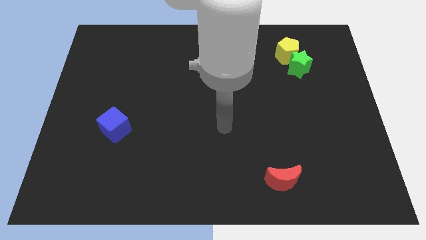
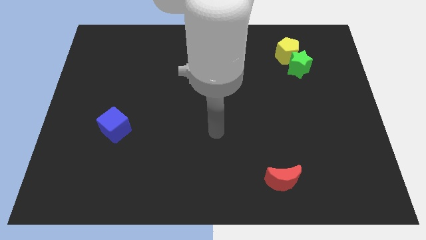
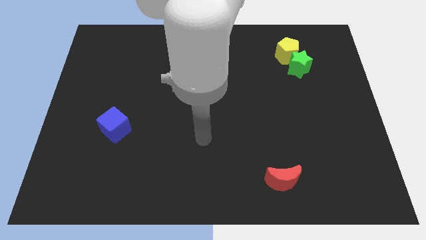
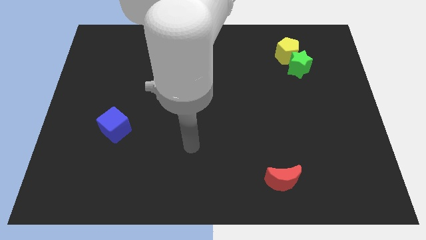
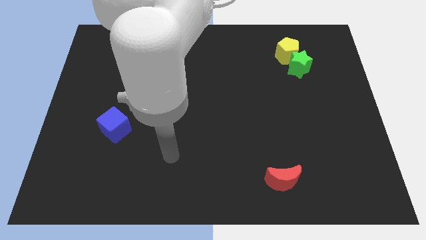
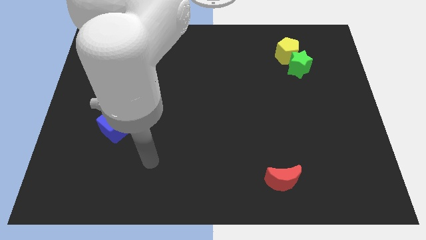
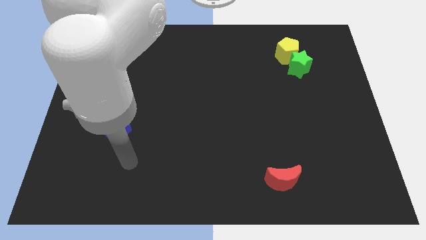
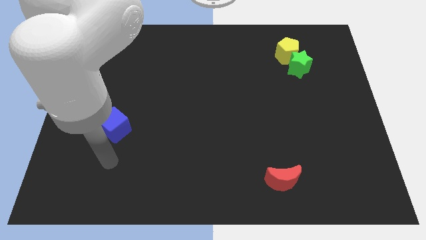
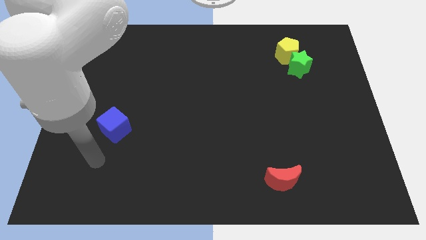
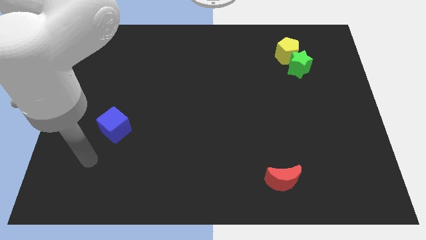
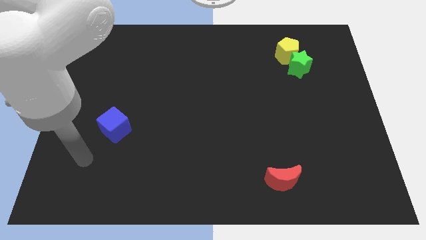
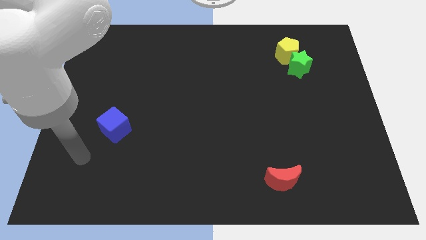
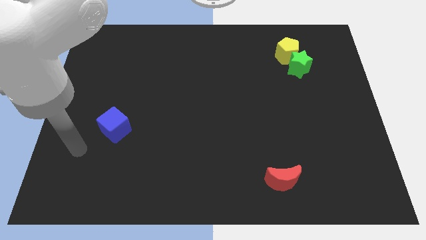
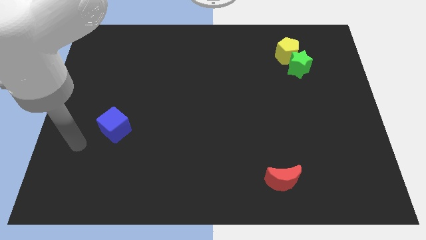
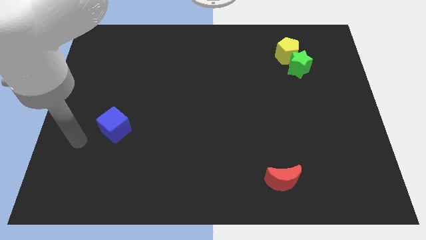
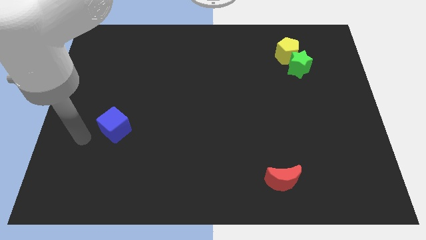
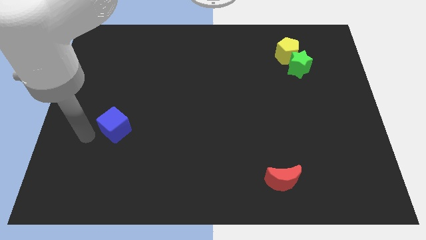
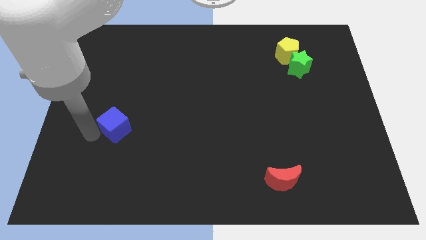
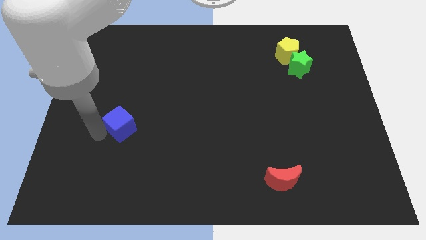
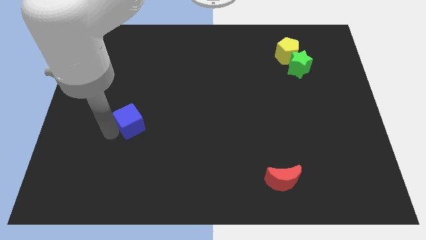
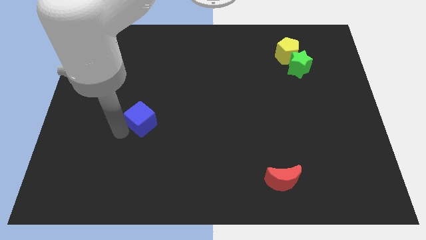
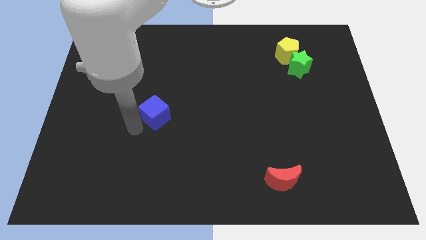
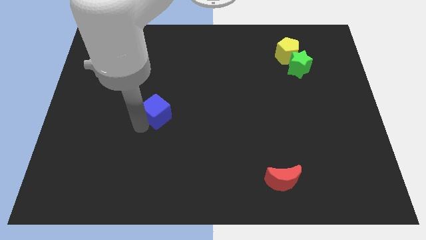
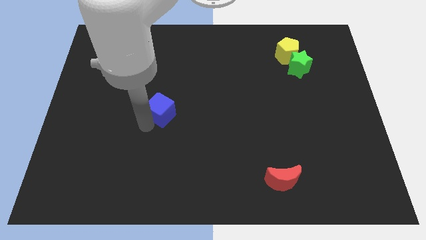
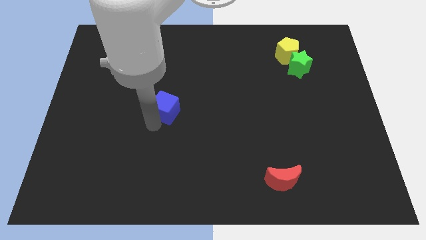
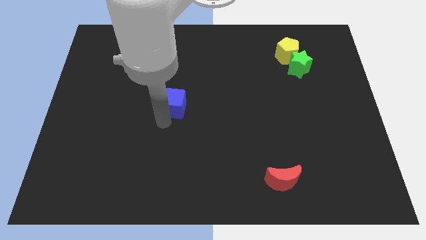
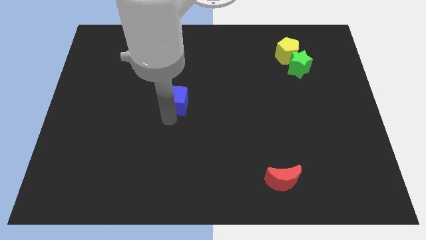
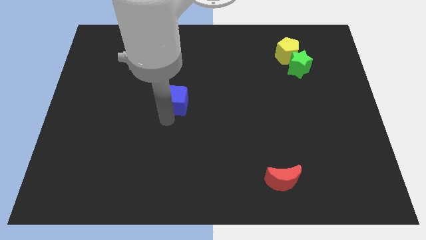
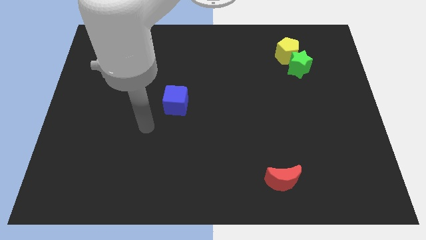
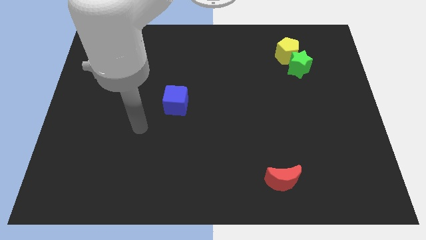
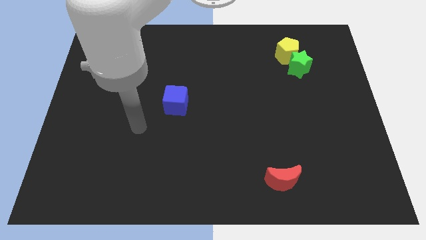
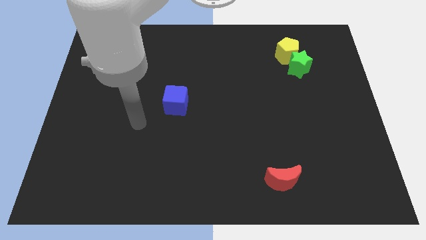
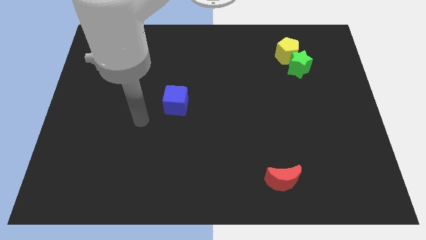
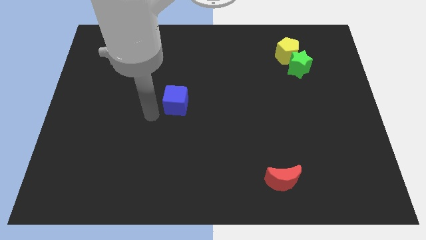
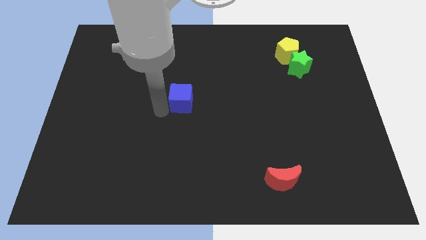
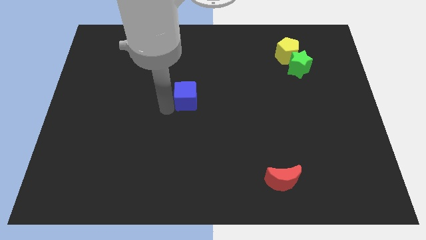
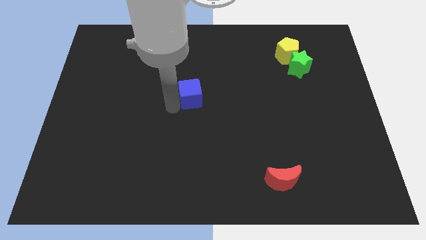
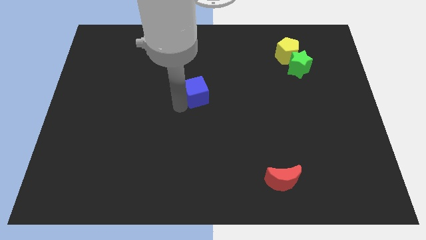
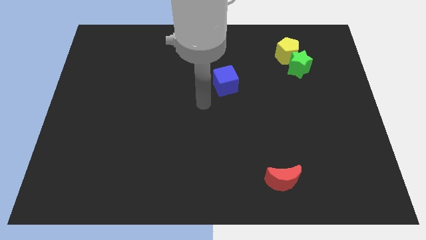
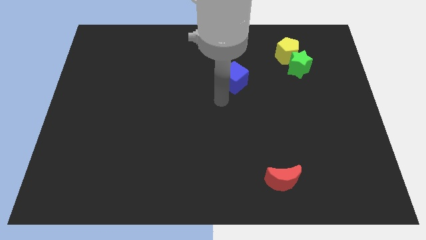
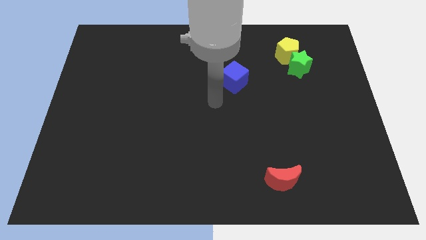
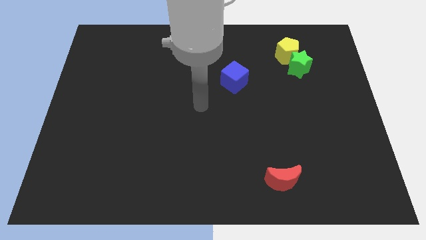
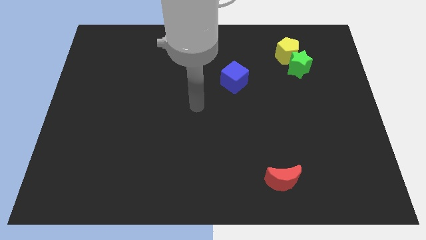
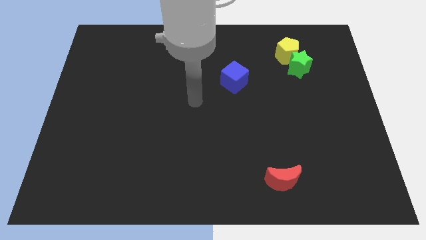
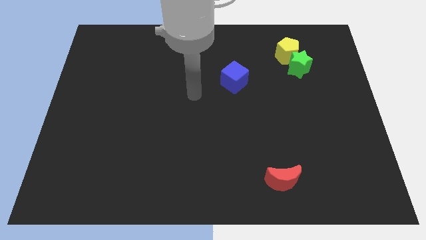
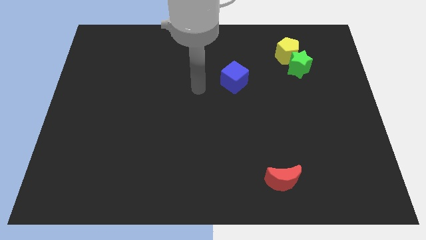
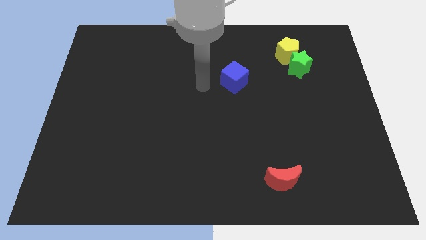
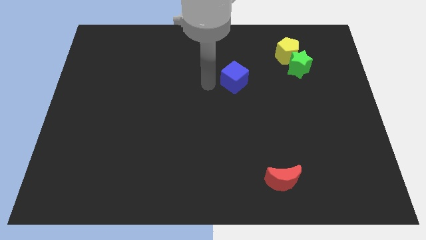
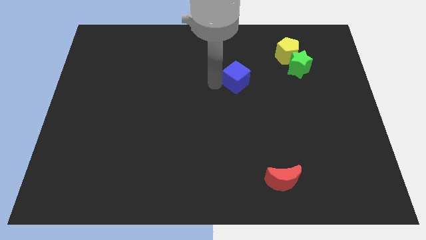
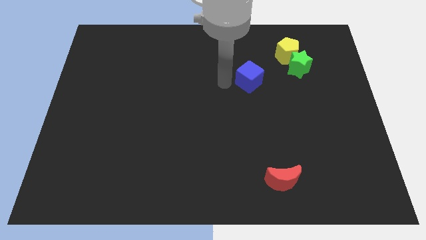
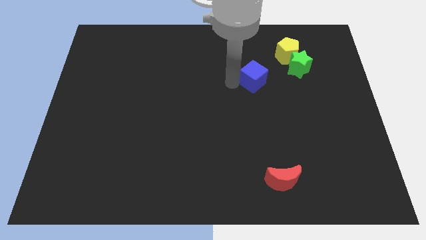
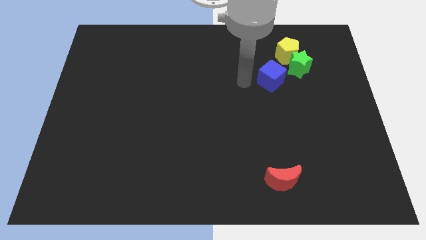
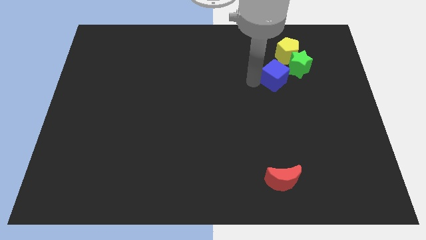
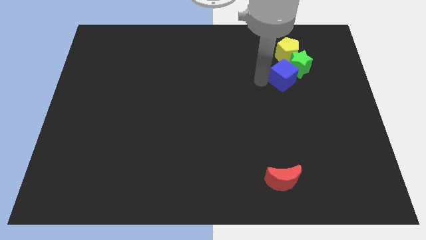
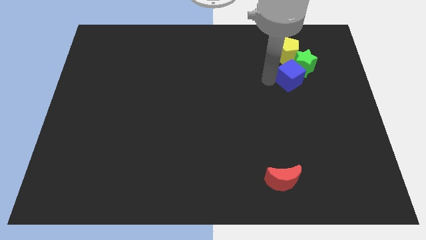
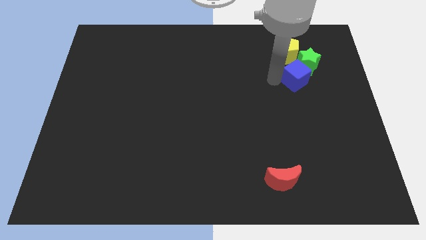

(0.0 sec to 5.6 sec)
push the blue block towards the green star

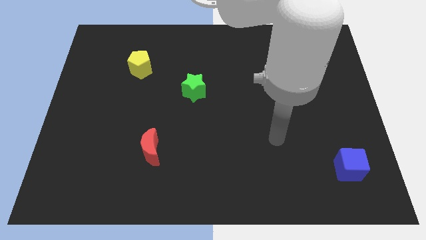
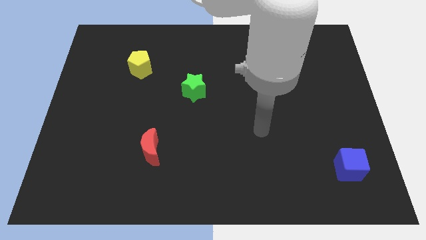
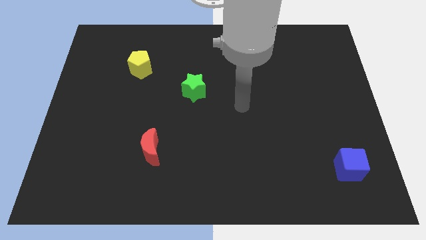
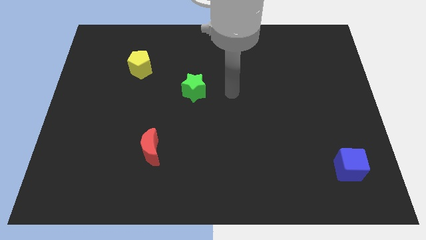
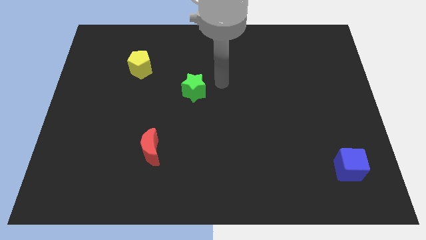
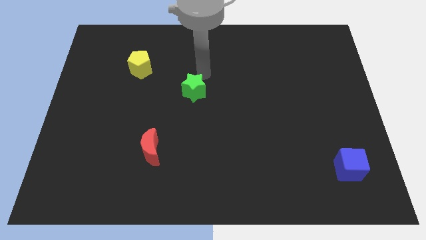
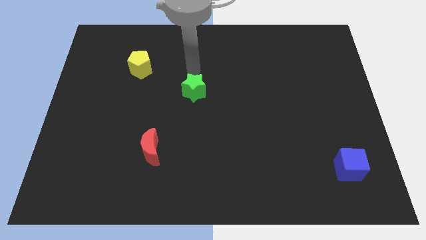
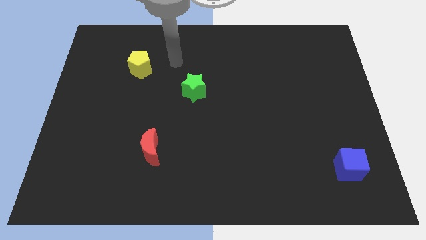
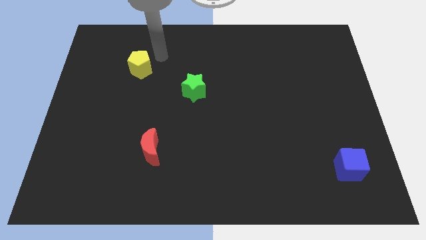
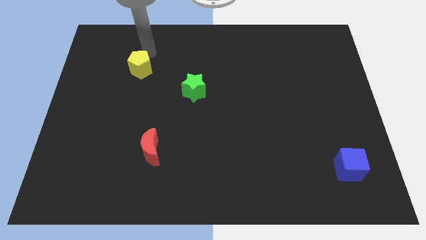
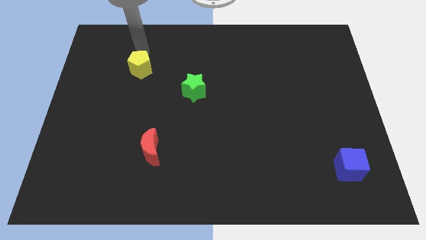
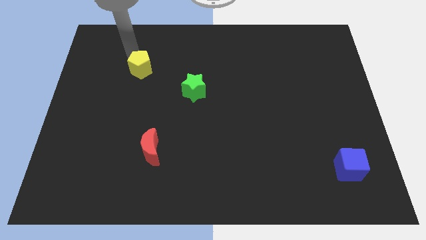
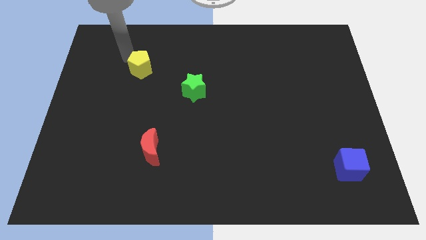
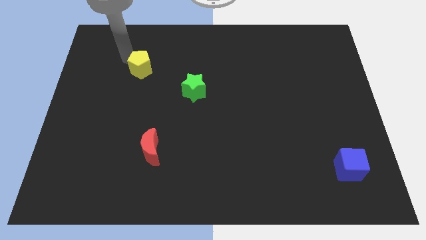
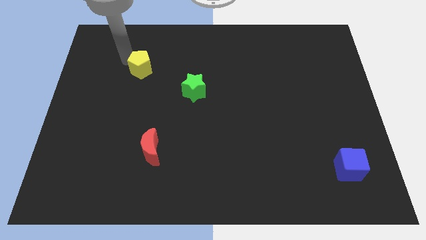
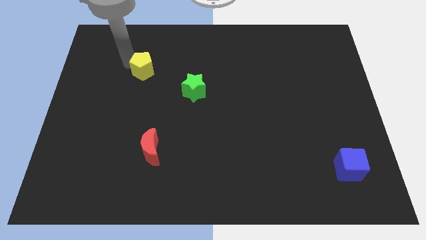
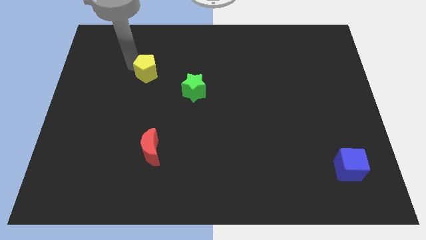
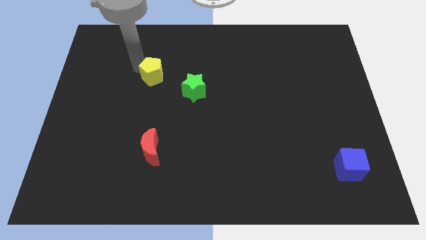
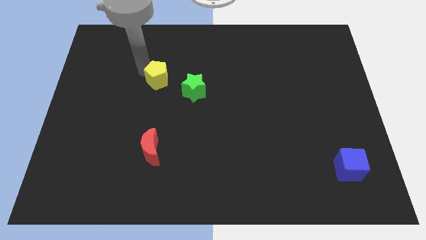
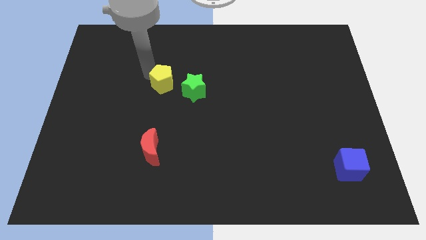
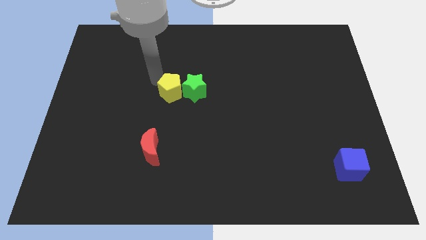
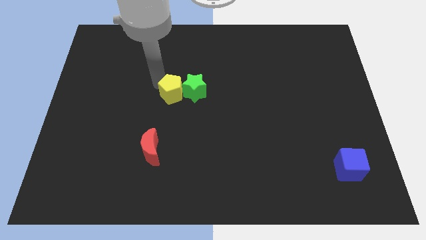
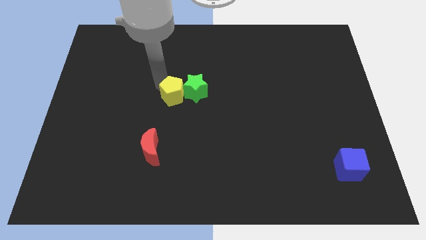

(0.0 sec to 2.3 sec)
move the yellow pentagon next to the green star

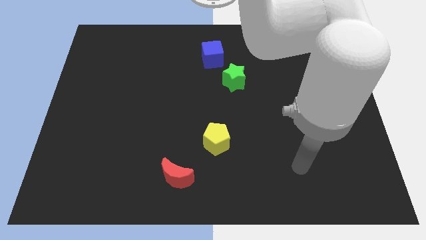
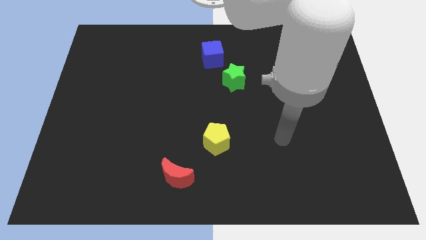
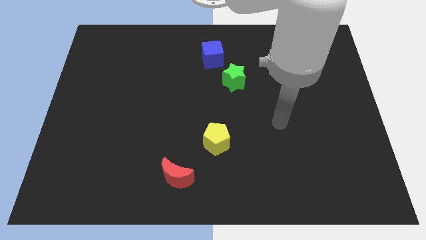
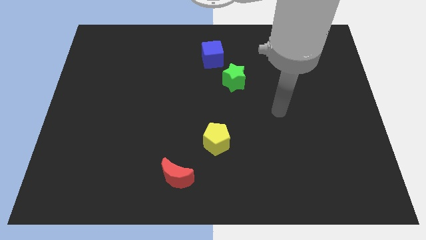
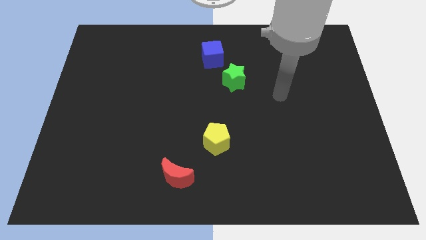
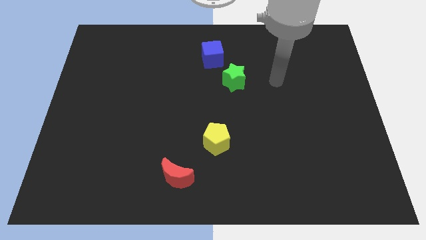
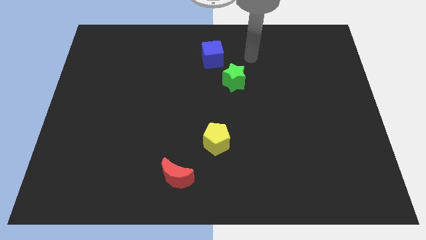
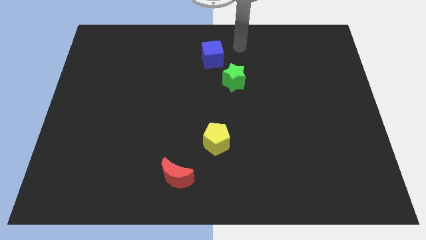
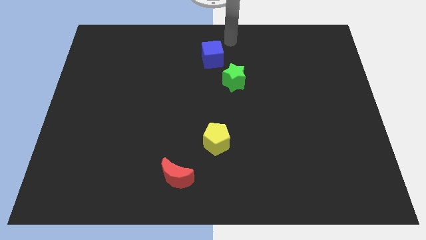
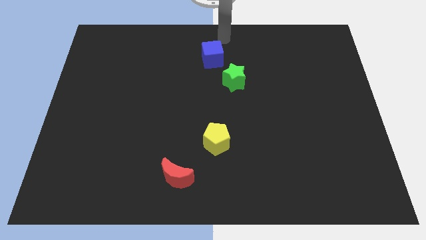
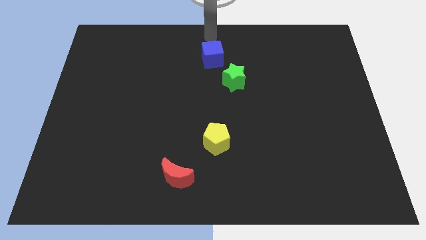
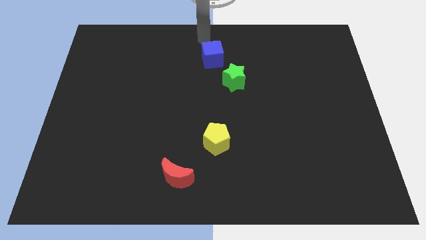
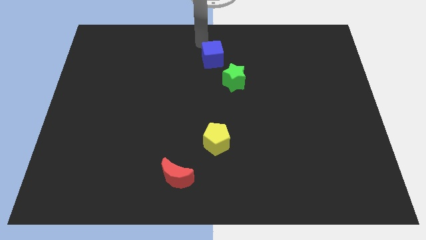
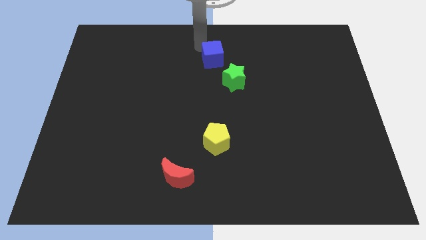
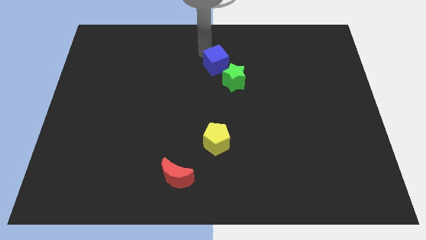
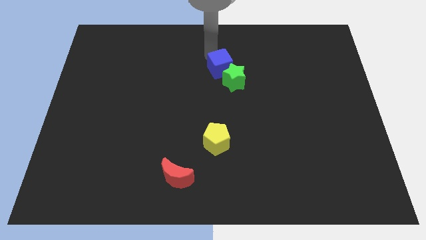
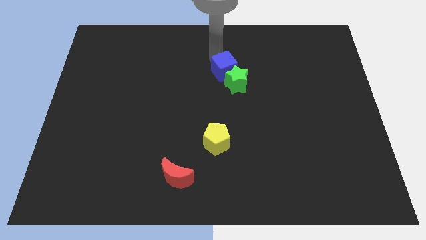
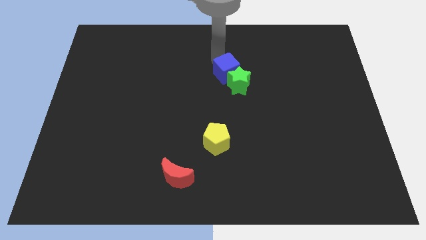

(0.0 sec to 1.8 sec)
put the blue cube to the green block
